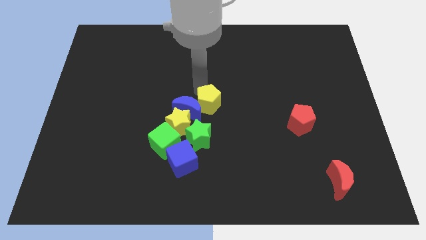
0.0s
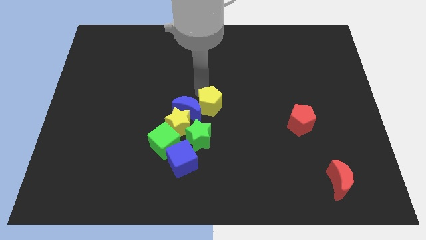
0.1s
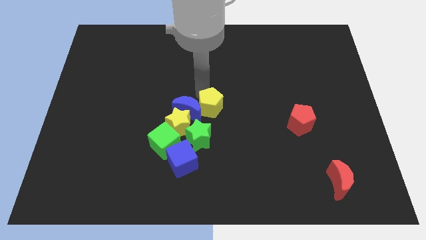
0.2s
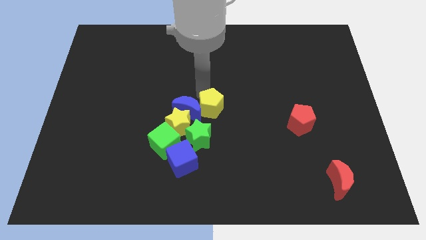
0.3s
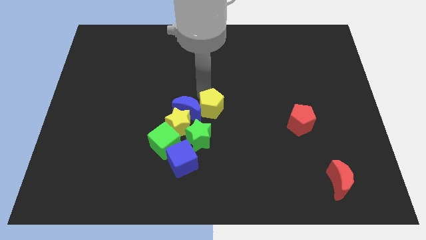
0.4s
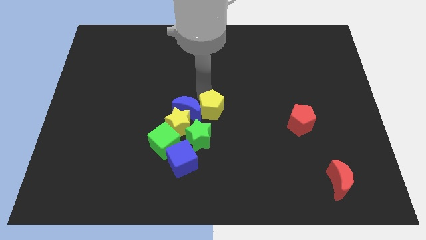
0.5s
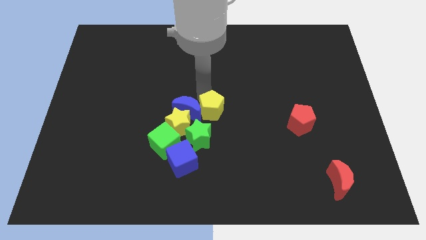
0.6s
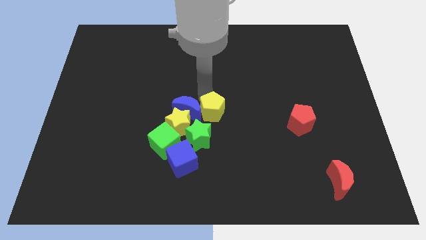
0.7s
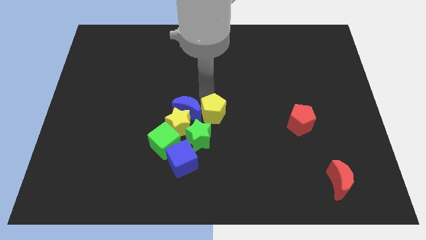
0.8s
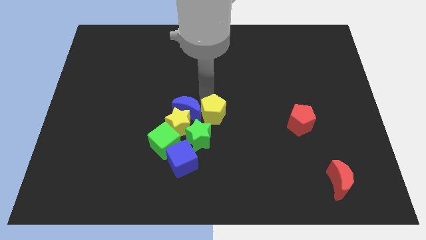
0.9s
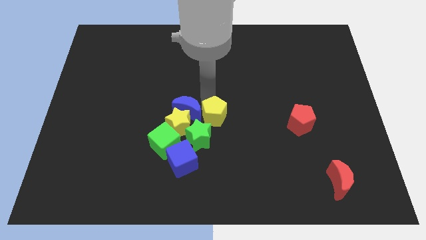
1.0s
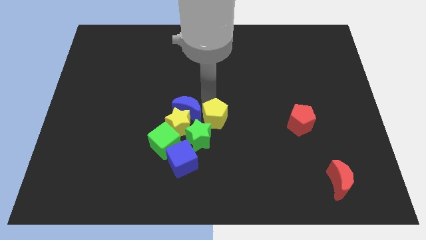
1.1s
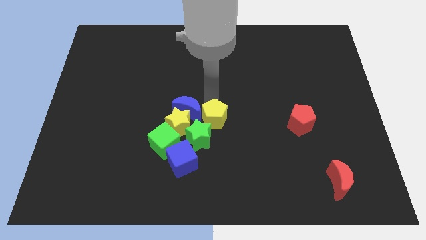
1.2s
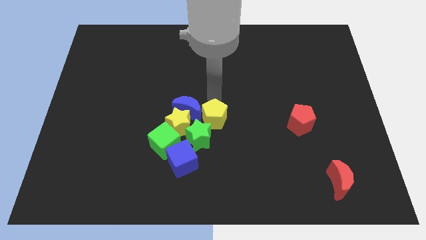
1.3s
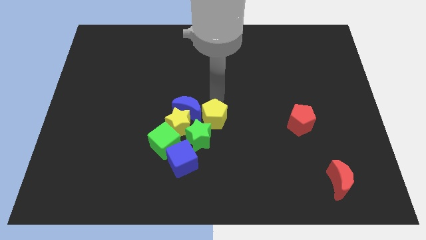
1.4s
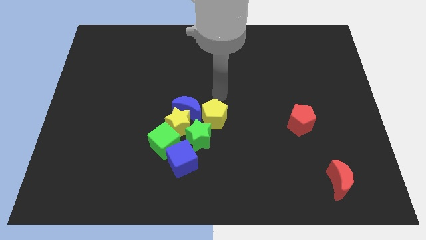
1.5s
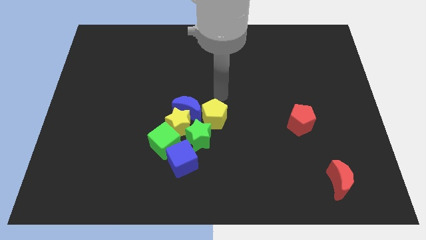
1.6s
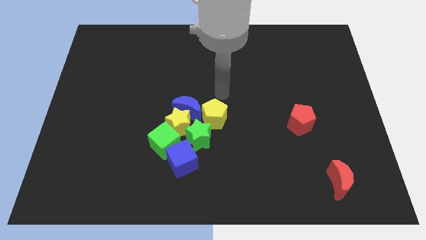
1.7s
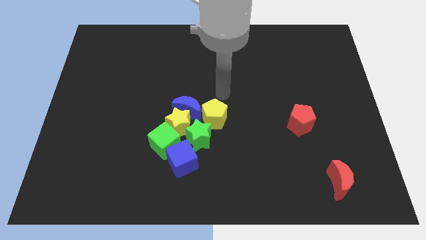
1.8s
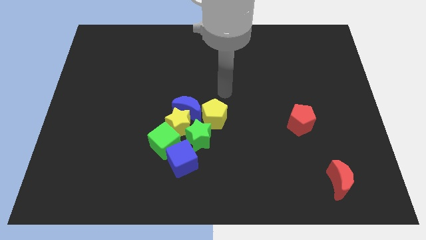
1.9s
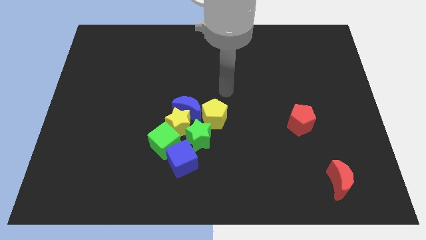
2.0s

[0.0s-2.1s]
place the yellow pentagon right to the blue crescent

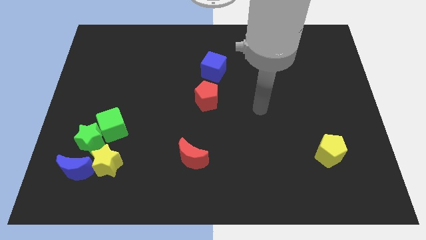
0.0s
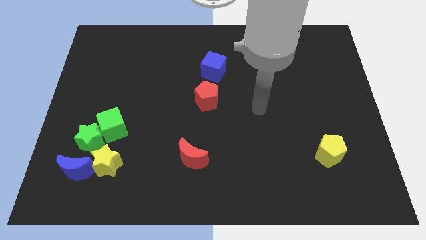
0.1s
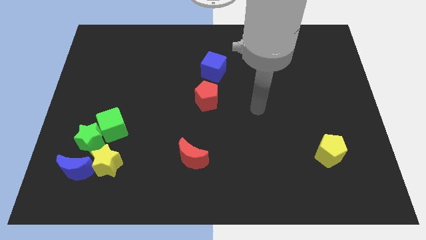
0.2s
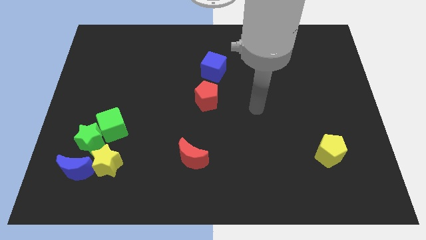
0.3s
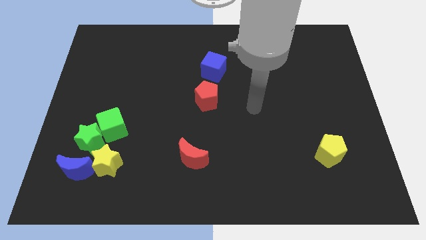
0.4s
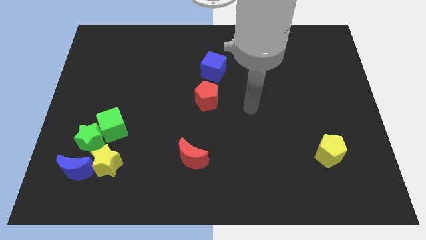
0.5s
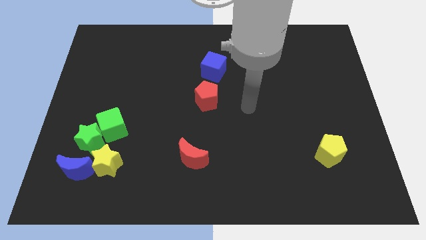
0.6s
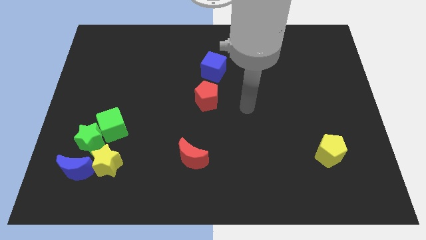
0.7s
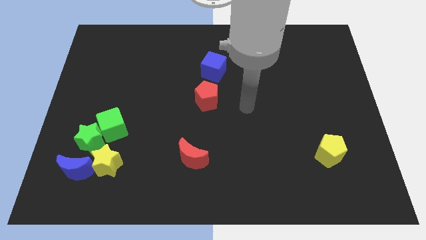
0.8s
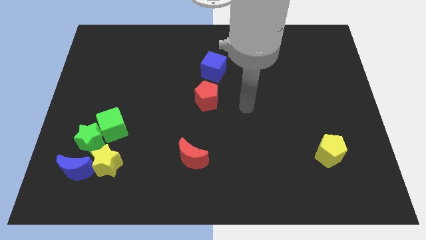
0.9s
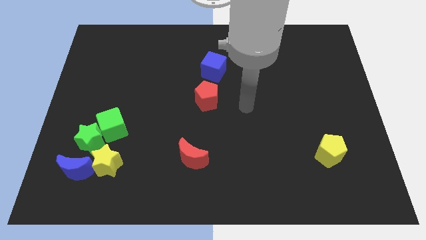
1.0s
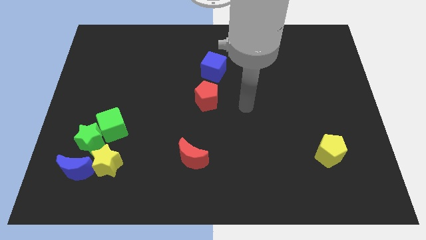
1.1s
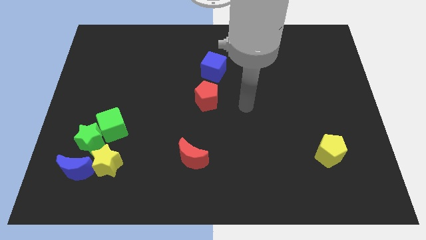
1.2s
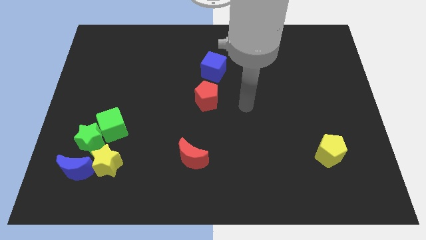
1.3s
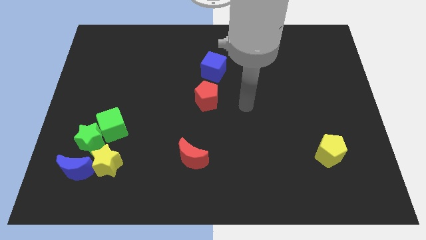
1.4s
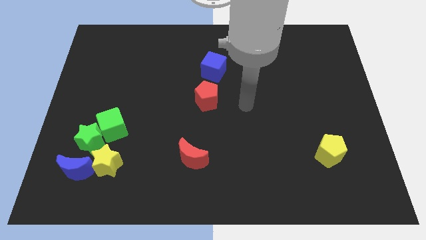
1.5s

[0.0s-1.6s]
slide the pointer close to the red pentagon

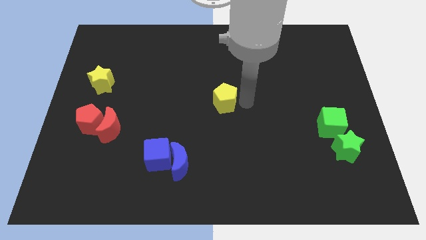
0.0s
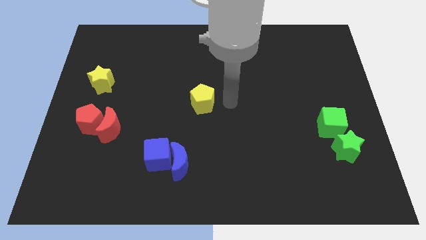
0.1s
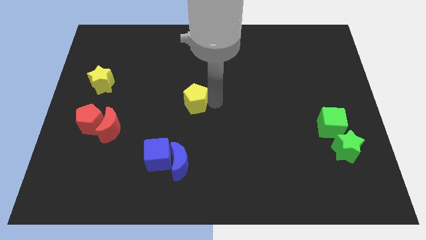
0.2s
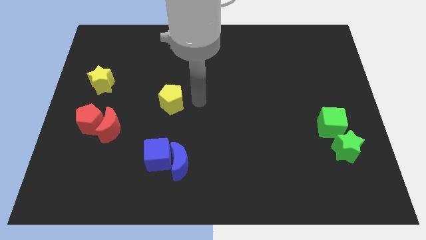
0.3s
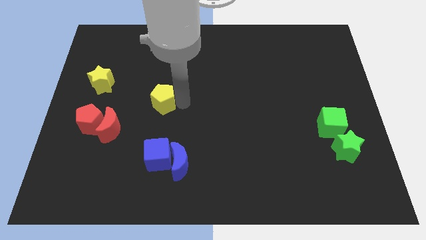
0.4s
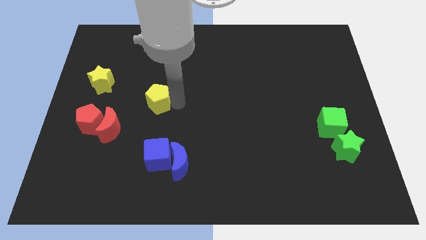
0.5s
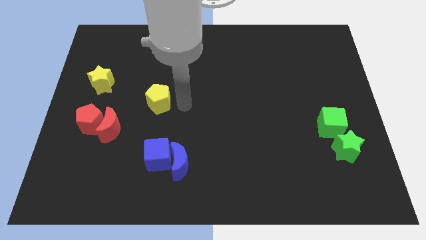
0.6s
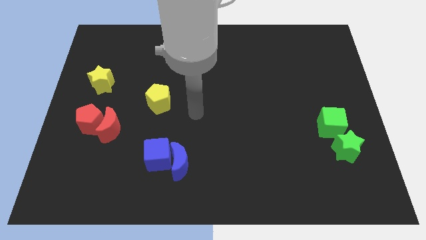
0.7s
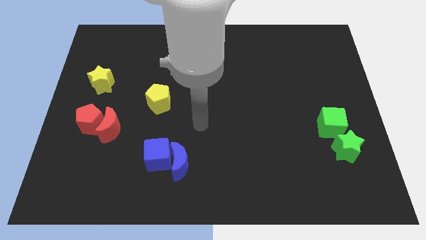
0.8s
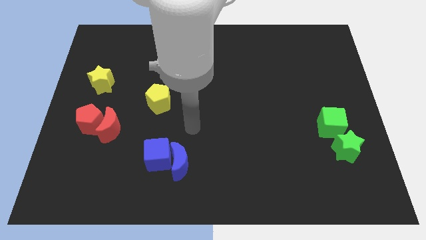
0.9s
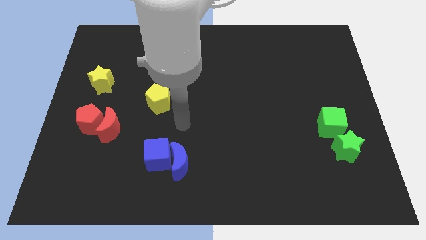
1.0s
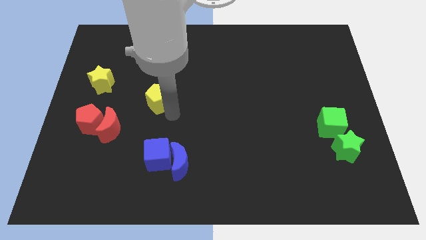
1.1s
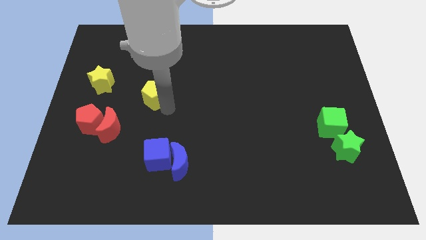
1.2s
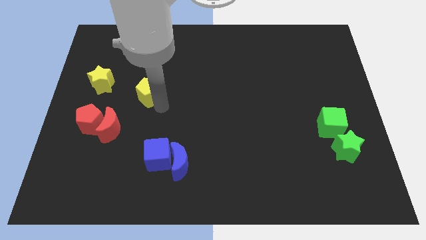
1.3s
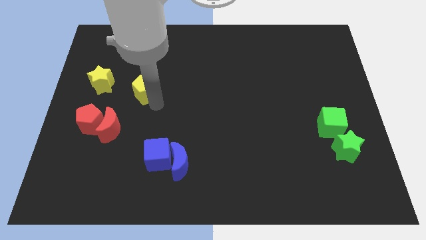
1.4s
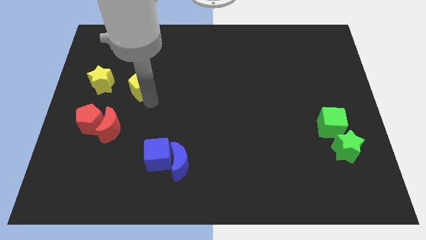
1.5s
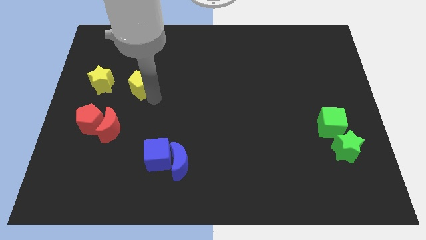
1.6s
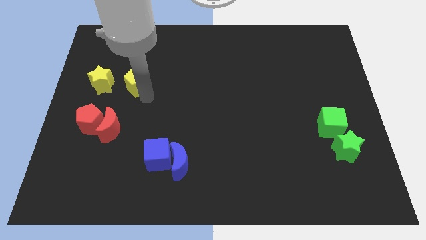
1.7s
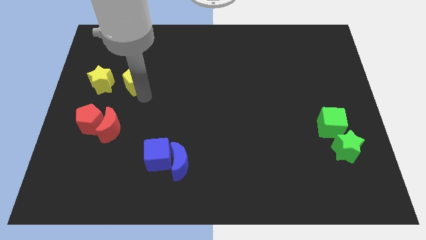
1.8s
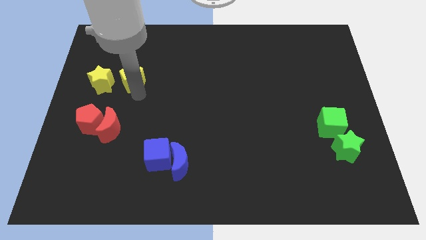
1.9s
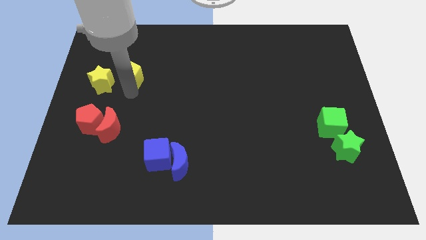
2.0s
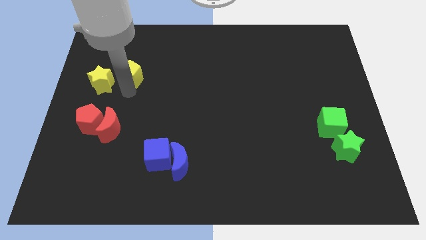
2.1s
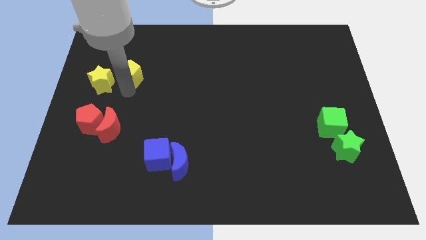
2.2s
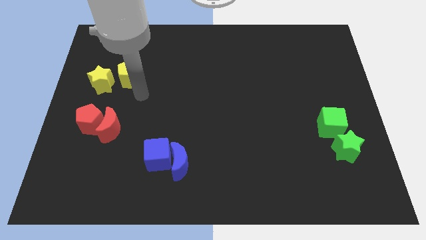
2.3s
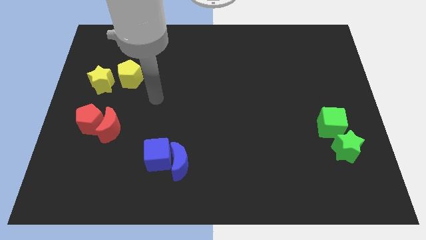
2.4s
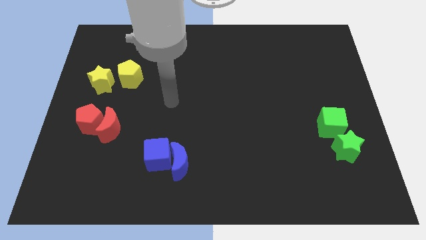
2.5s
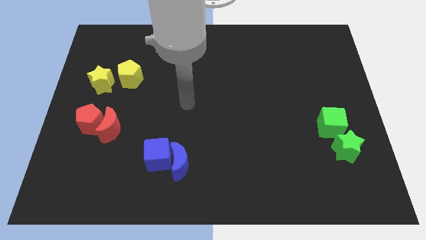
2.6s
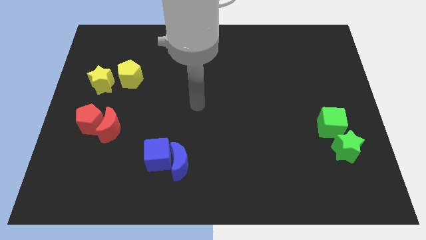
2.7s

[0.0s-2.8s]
place yellow pentagon towards yellow star

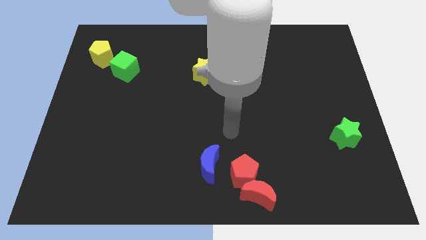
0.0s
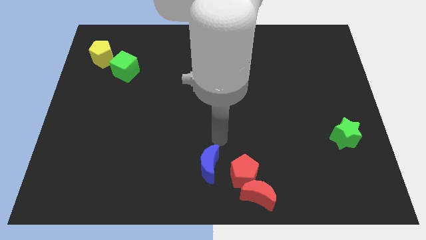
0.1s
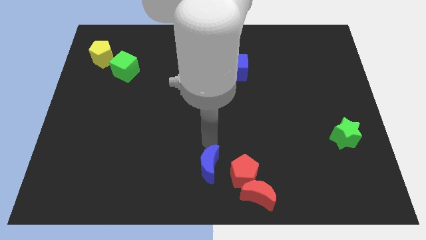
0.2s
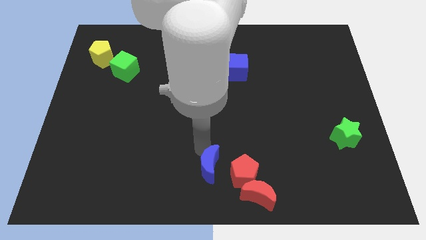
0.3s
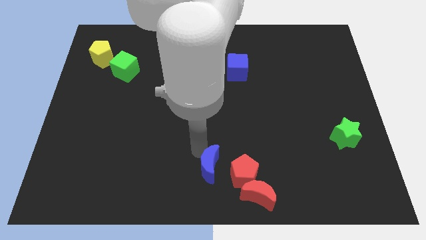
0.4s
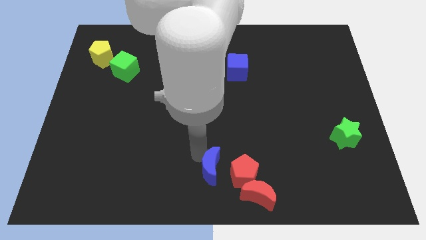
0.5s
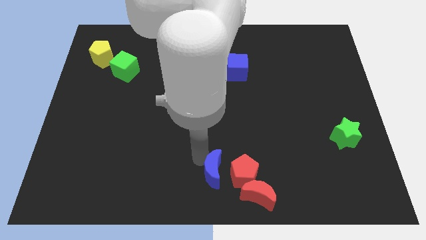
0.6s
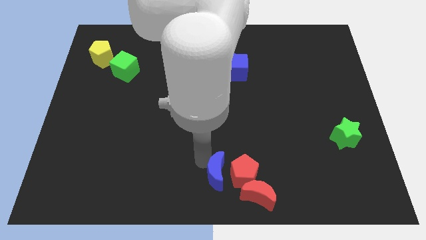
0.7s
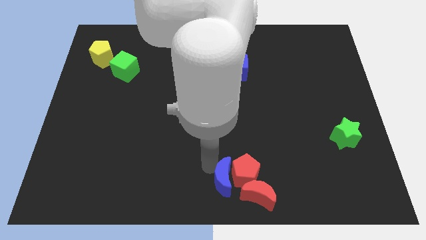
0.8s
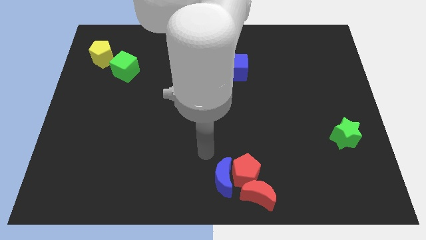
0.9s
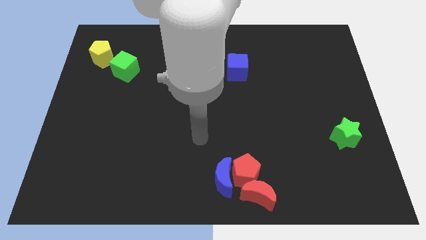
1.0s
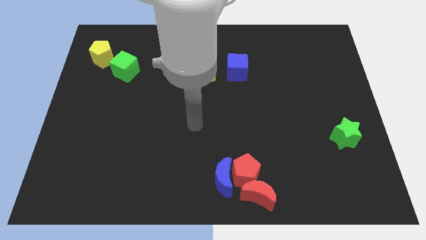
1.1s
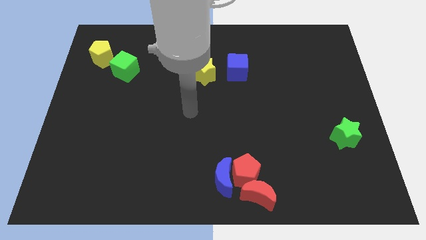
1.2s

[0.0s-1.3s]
push blue moon into the red pentagon

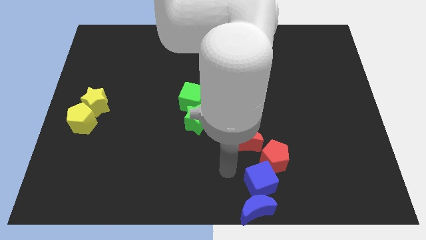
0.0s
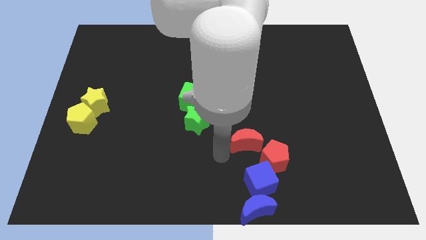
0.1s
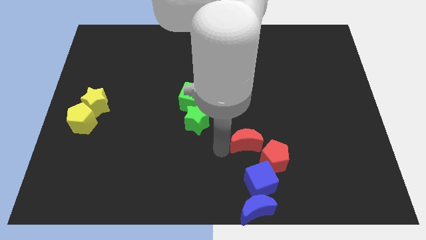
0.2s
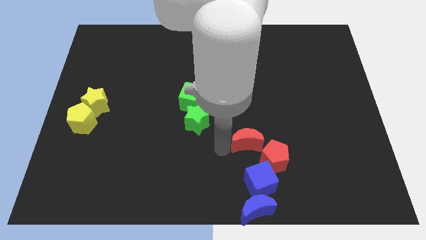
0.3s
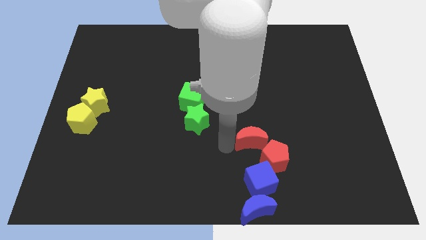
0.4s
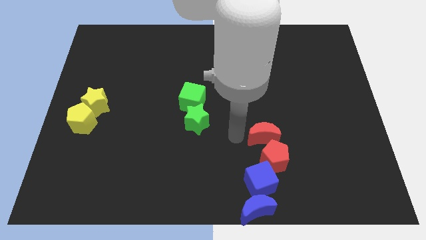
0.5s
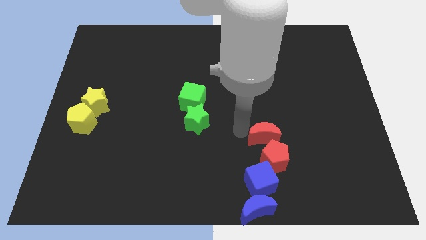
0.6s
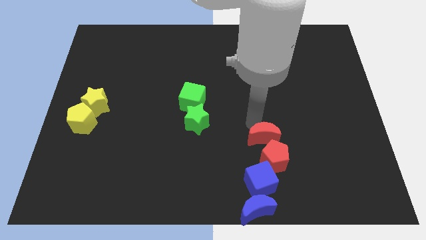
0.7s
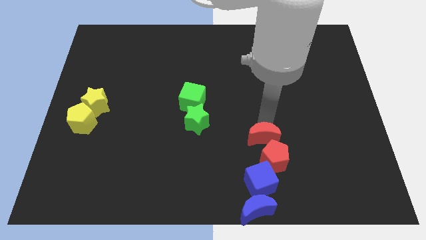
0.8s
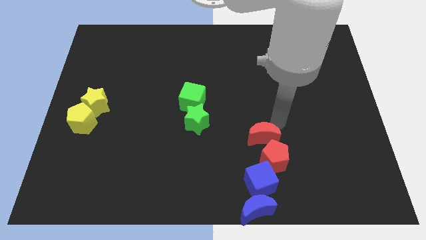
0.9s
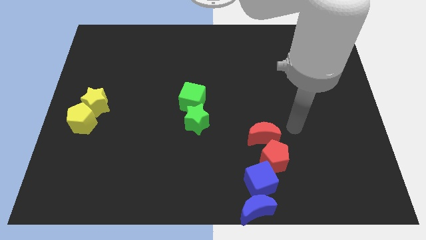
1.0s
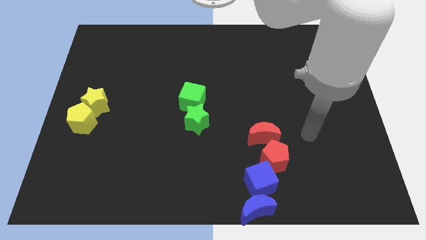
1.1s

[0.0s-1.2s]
slide red moon on top left of red pentagon
